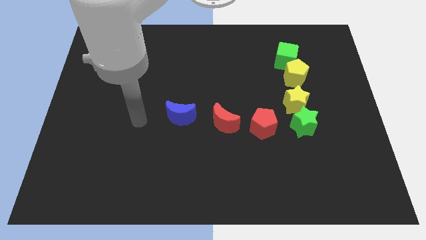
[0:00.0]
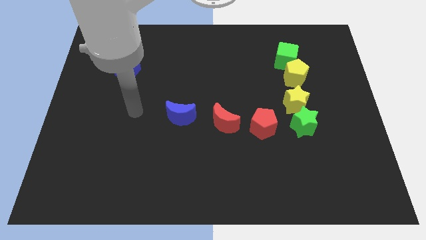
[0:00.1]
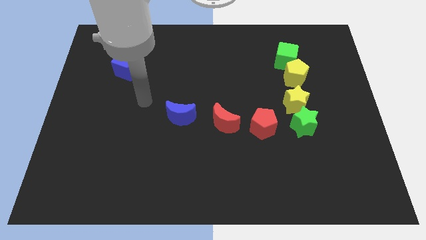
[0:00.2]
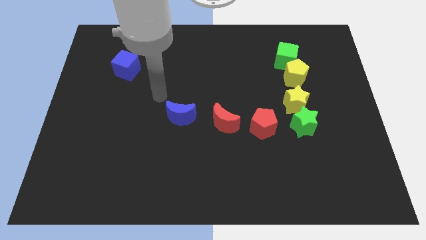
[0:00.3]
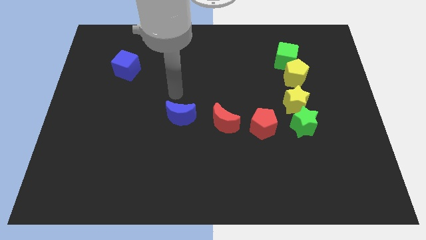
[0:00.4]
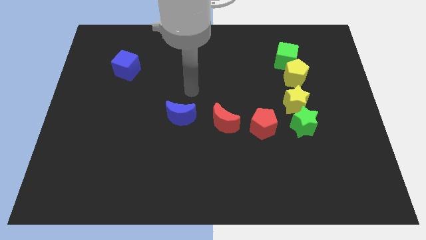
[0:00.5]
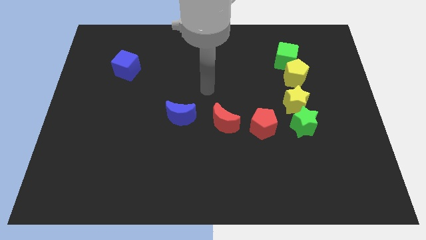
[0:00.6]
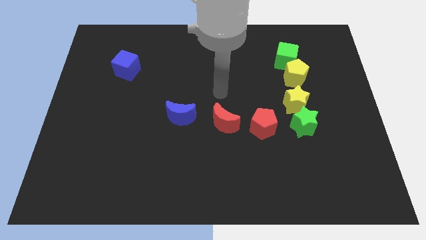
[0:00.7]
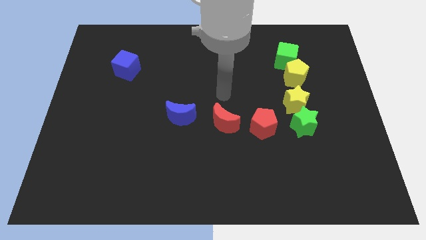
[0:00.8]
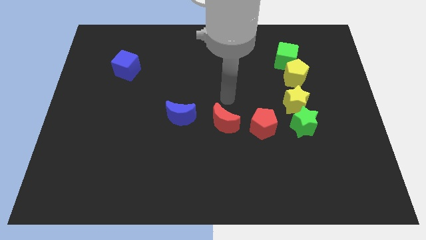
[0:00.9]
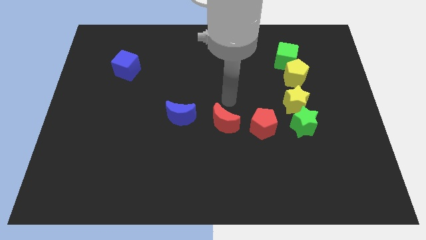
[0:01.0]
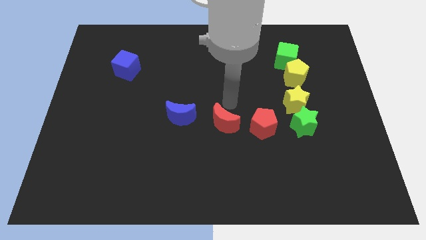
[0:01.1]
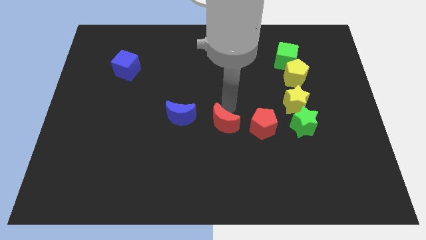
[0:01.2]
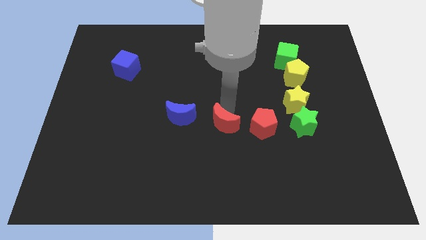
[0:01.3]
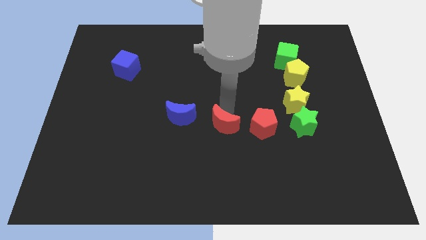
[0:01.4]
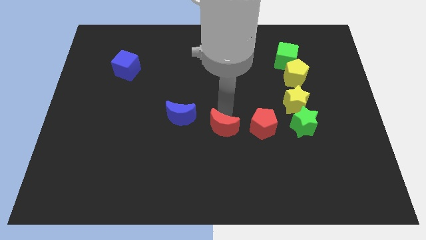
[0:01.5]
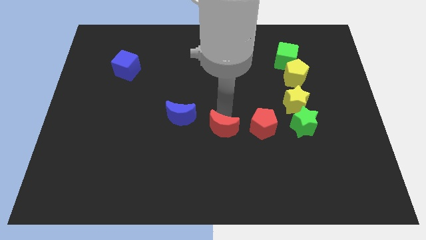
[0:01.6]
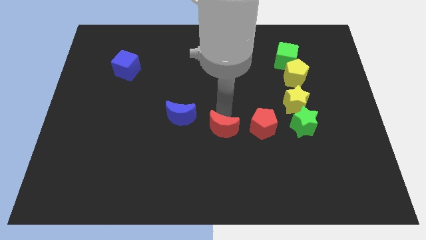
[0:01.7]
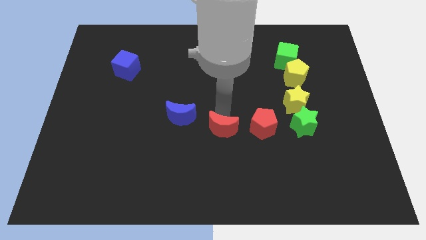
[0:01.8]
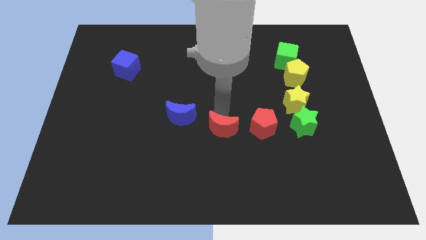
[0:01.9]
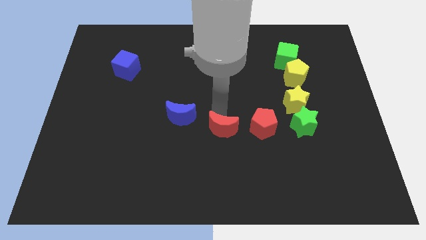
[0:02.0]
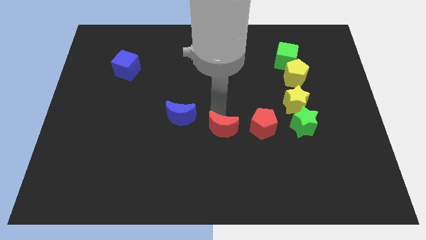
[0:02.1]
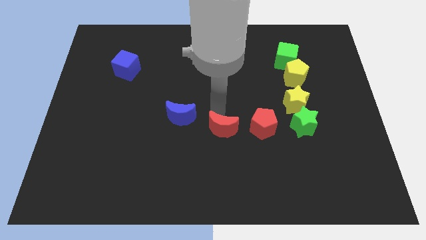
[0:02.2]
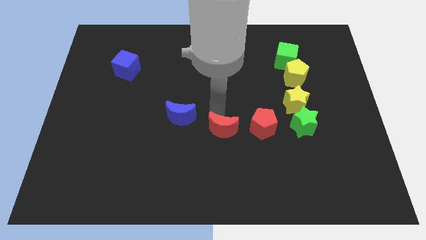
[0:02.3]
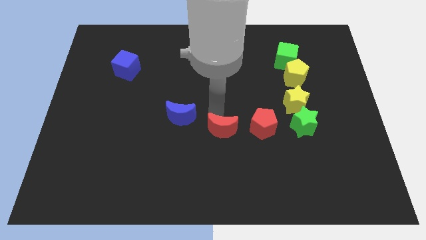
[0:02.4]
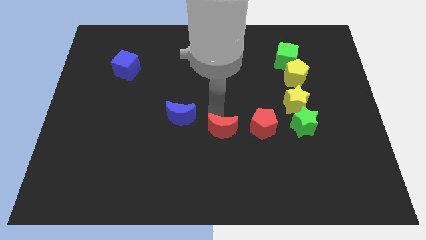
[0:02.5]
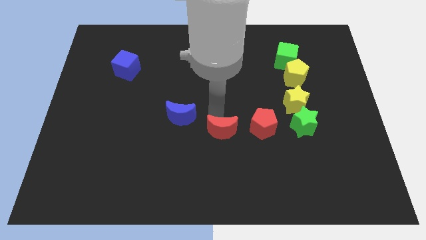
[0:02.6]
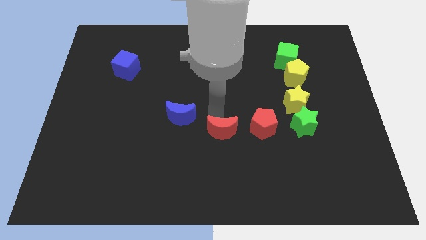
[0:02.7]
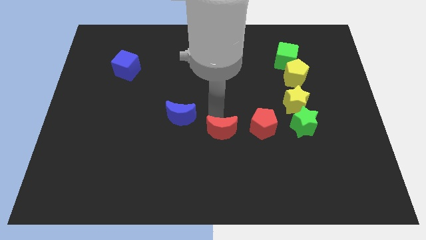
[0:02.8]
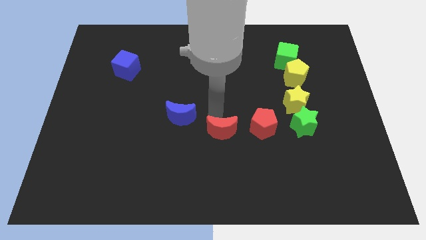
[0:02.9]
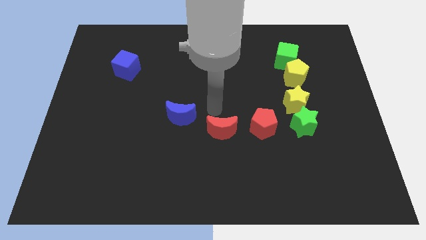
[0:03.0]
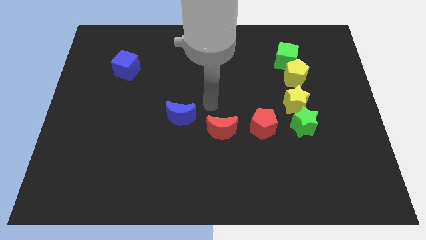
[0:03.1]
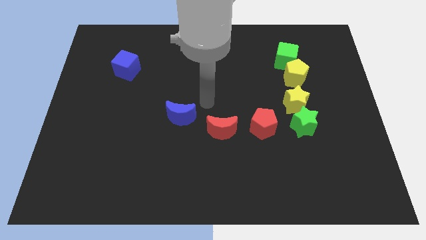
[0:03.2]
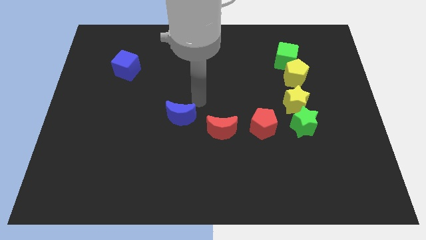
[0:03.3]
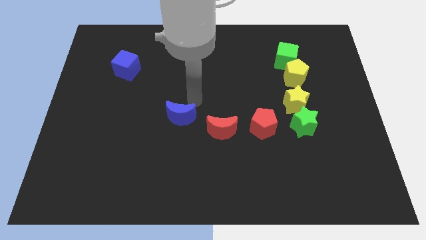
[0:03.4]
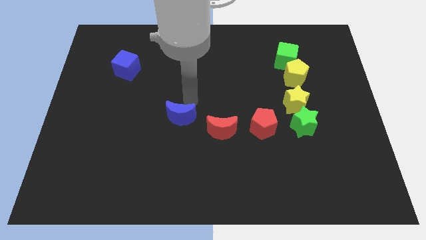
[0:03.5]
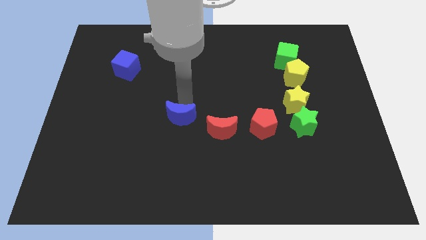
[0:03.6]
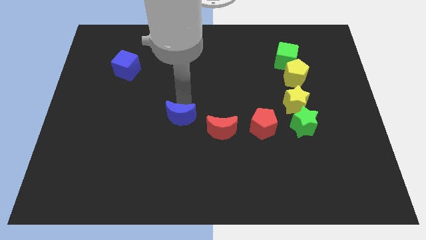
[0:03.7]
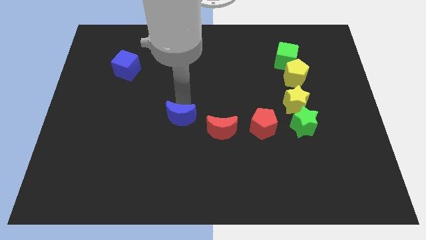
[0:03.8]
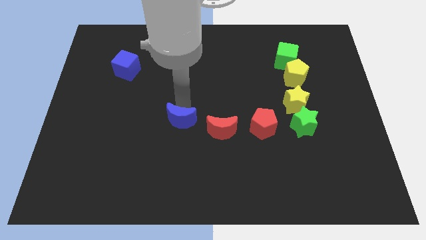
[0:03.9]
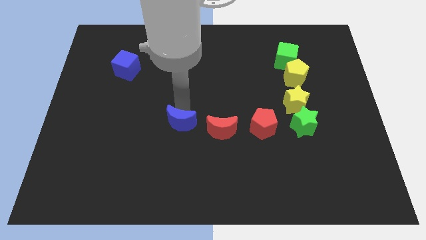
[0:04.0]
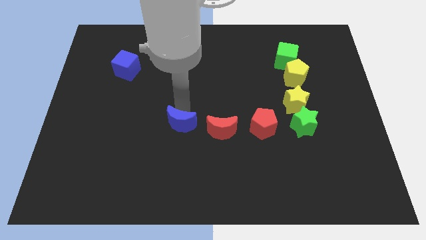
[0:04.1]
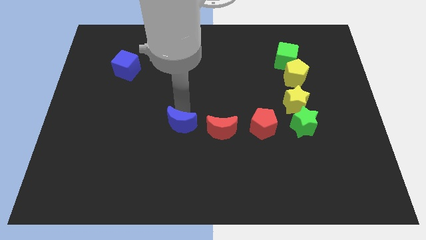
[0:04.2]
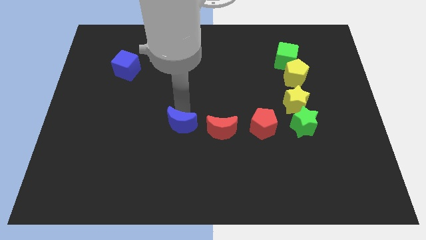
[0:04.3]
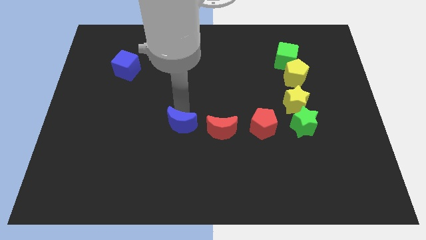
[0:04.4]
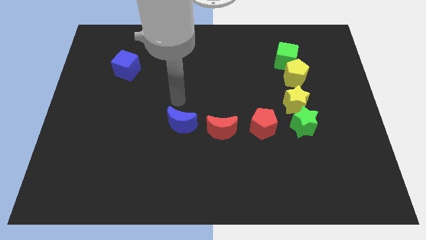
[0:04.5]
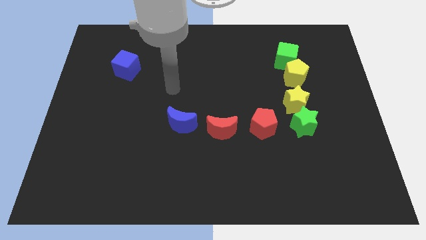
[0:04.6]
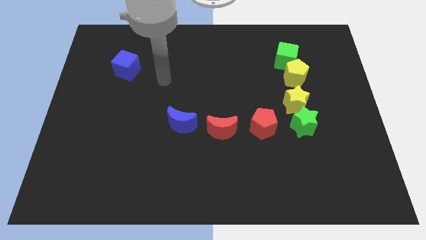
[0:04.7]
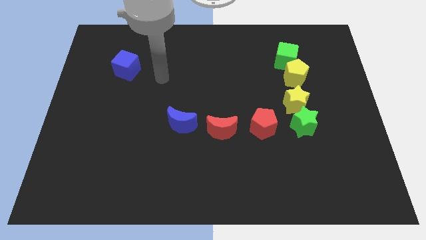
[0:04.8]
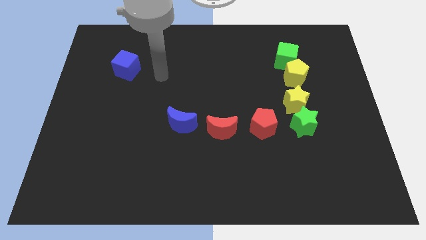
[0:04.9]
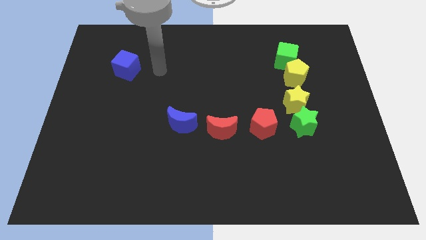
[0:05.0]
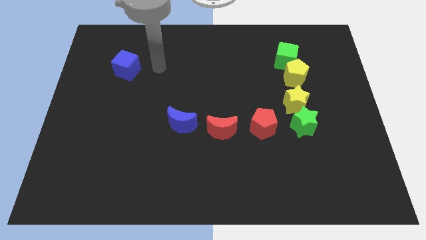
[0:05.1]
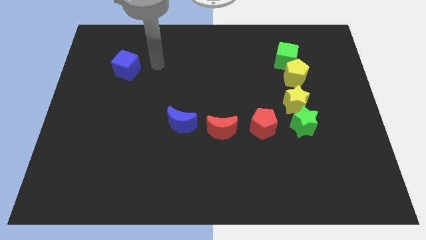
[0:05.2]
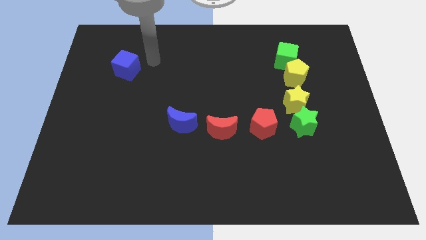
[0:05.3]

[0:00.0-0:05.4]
push the blue moon towards down

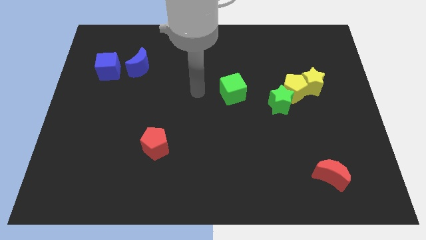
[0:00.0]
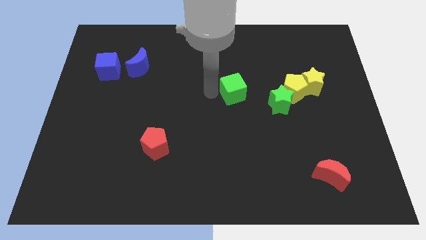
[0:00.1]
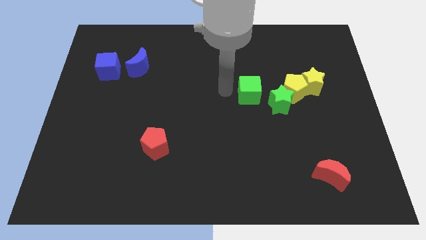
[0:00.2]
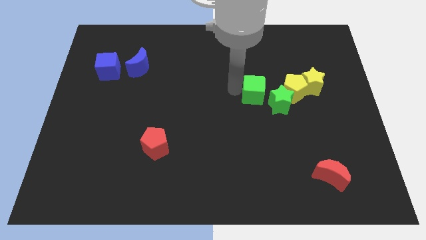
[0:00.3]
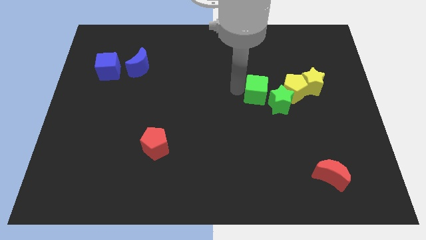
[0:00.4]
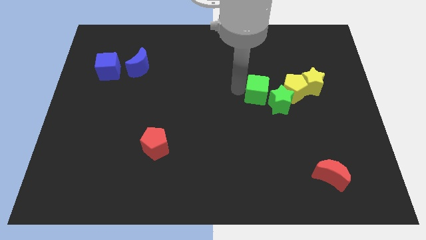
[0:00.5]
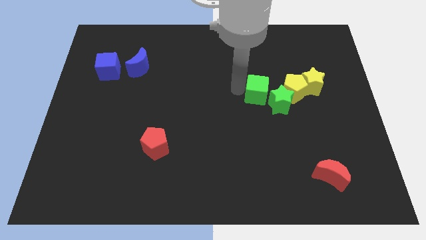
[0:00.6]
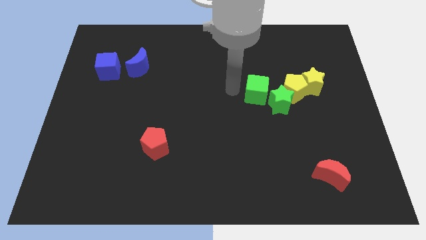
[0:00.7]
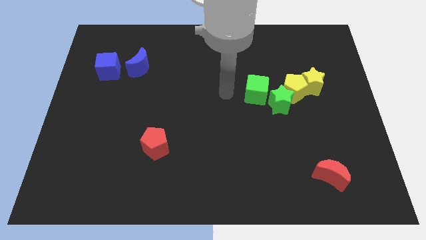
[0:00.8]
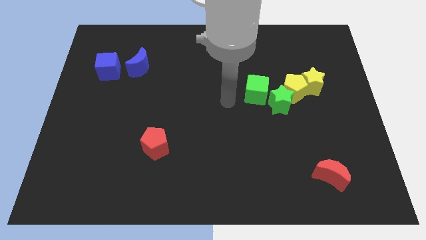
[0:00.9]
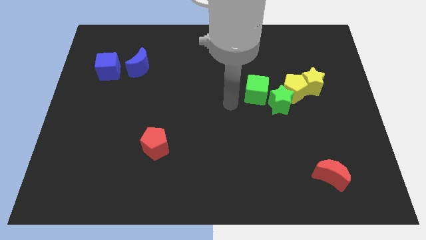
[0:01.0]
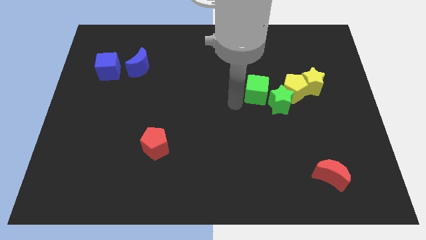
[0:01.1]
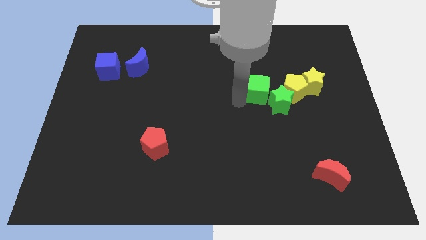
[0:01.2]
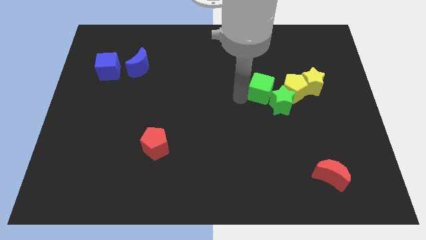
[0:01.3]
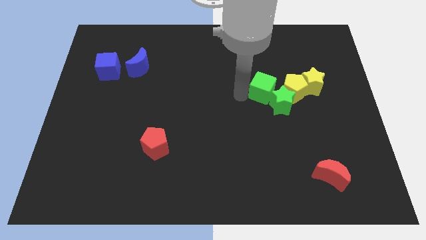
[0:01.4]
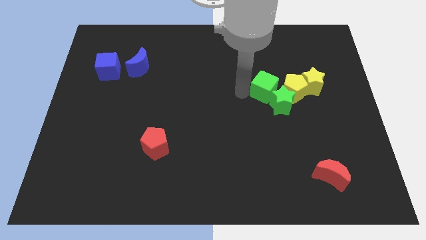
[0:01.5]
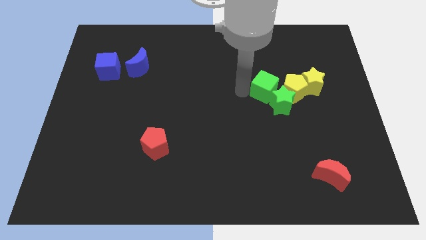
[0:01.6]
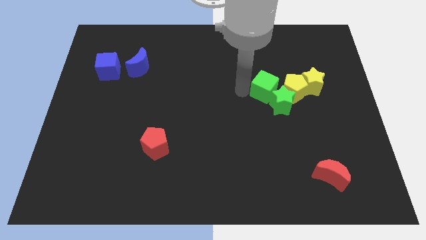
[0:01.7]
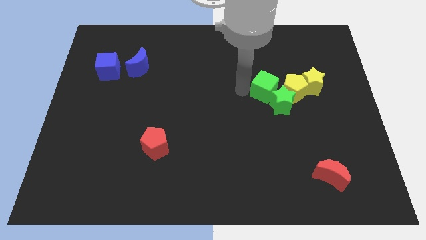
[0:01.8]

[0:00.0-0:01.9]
move the green cube into the green star diagonally top left

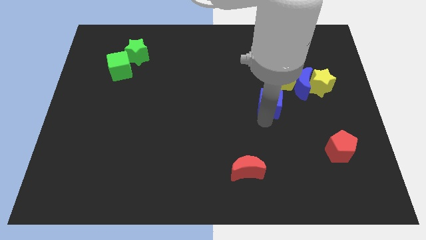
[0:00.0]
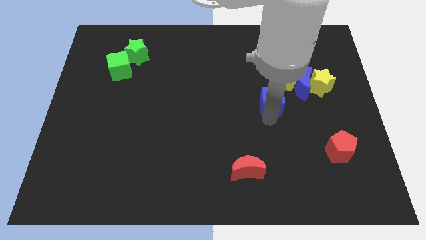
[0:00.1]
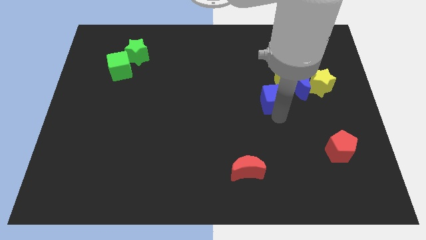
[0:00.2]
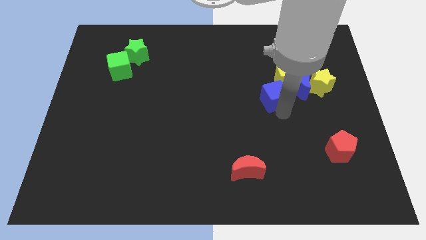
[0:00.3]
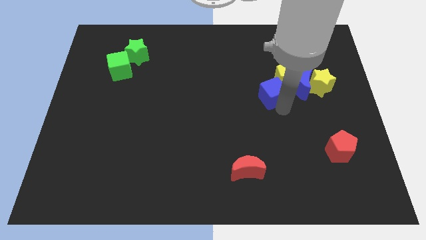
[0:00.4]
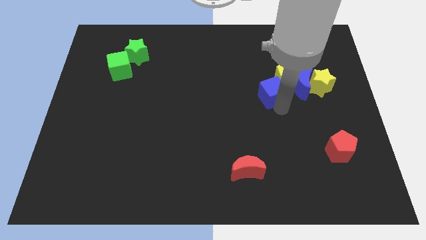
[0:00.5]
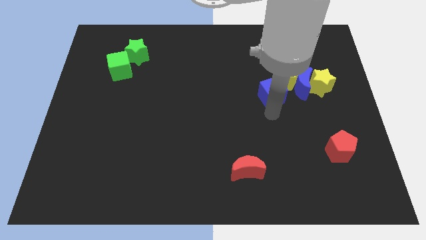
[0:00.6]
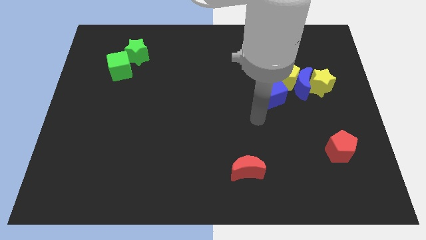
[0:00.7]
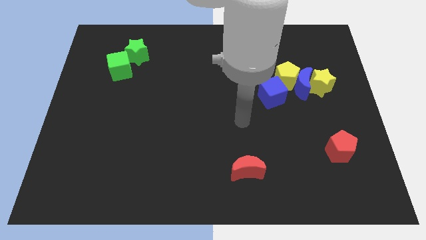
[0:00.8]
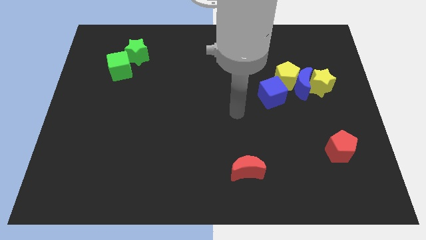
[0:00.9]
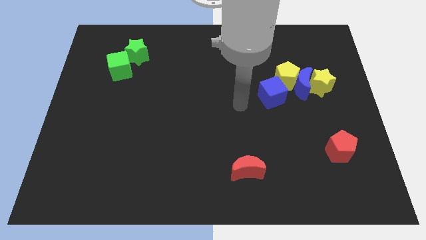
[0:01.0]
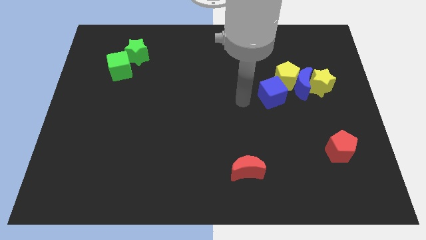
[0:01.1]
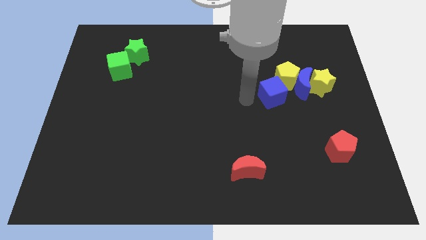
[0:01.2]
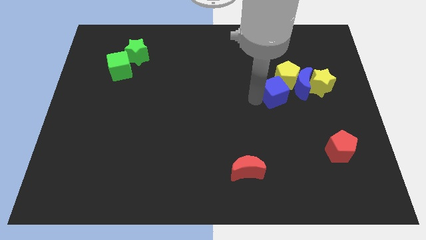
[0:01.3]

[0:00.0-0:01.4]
push the blue cube towards the group of objects
